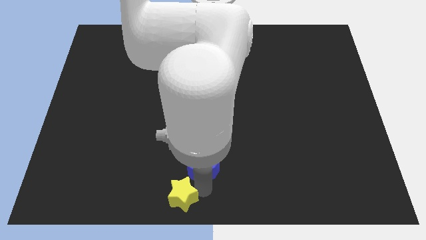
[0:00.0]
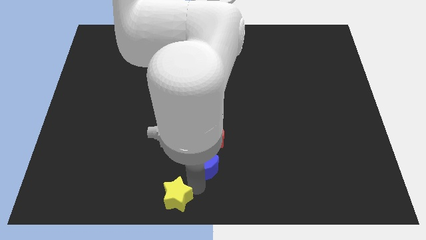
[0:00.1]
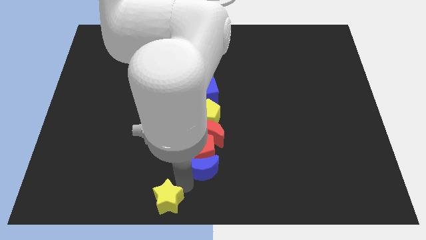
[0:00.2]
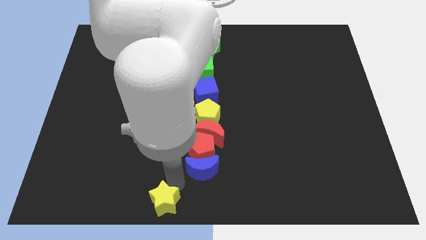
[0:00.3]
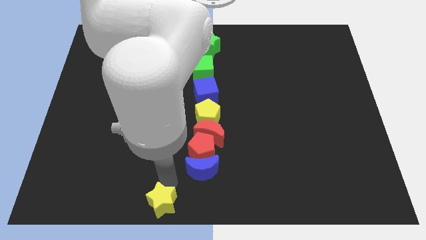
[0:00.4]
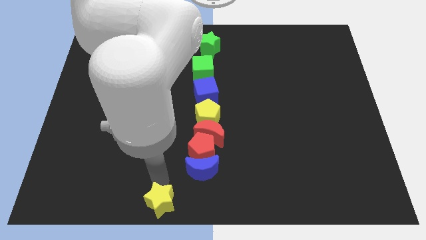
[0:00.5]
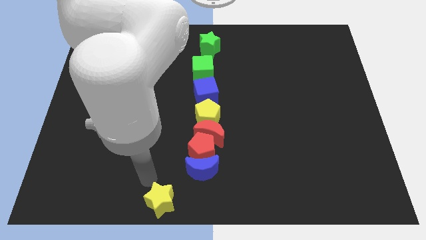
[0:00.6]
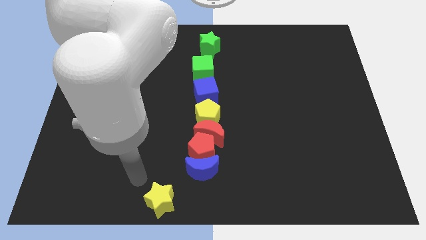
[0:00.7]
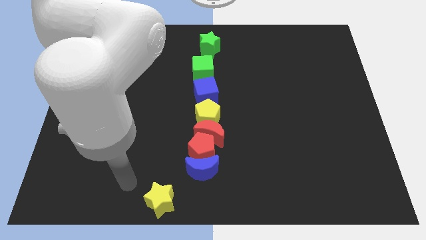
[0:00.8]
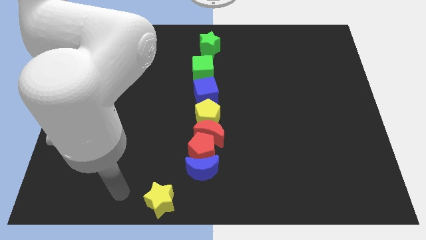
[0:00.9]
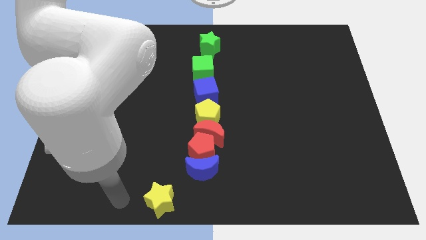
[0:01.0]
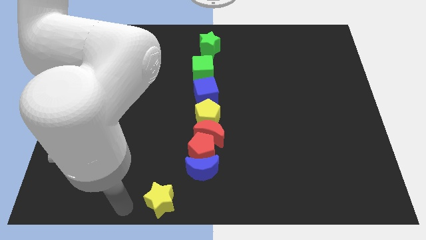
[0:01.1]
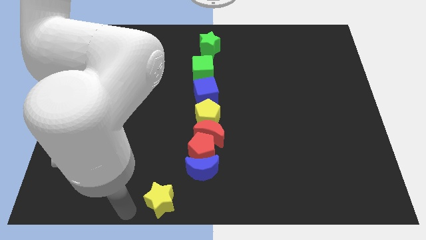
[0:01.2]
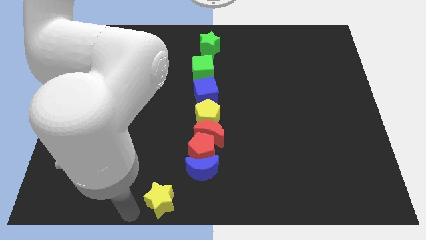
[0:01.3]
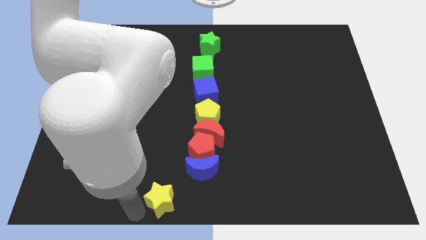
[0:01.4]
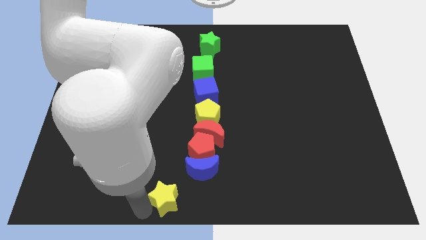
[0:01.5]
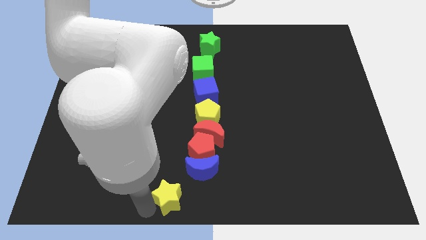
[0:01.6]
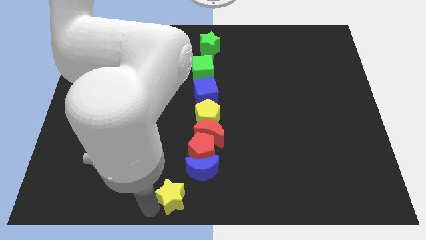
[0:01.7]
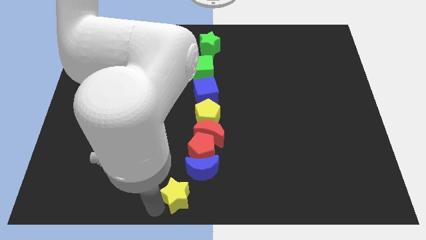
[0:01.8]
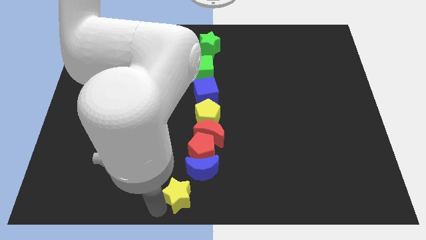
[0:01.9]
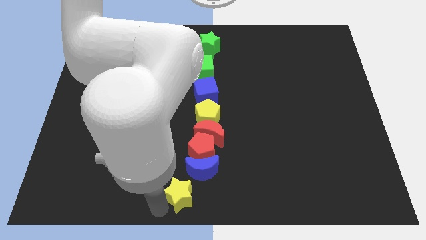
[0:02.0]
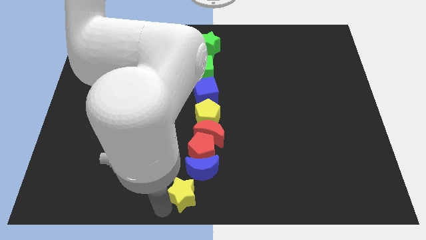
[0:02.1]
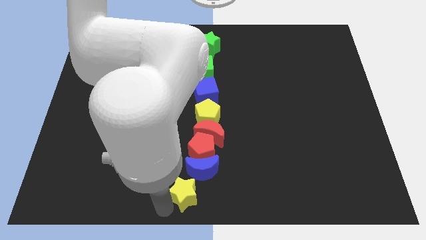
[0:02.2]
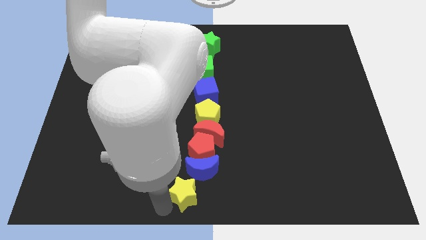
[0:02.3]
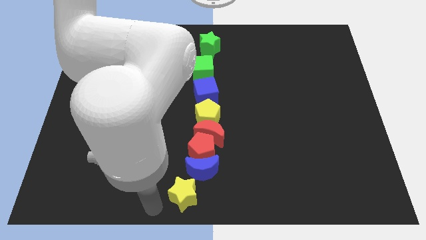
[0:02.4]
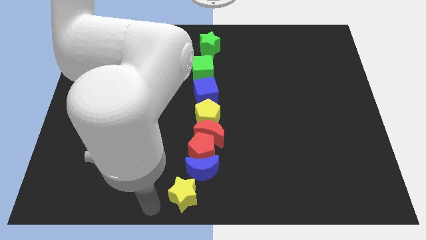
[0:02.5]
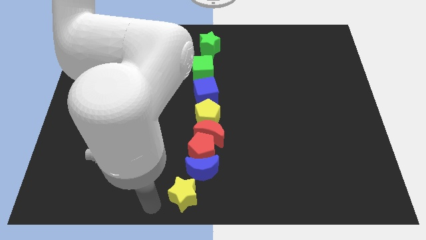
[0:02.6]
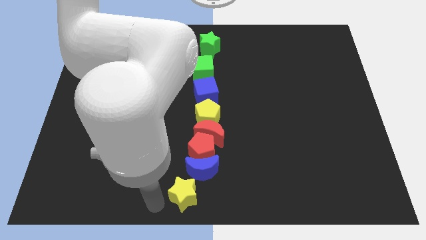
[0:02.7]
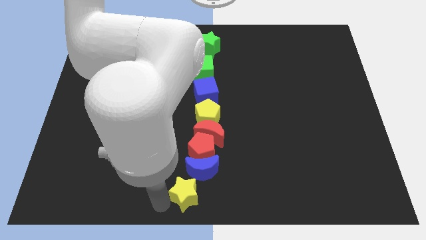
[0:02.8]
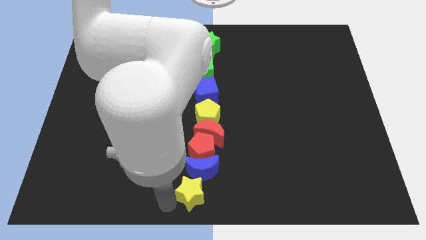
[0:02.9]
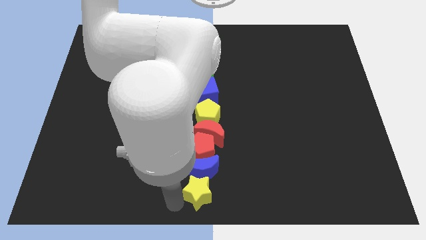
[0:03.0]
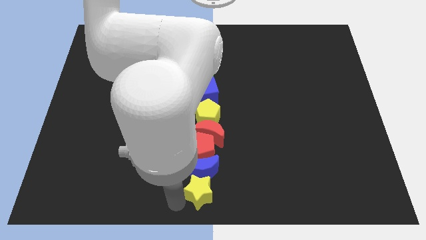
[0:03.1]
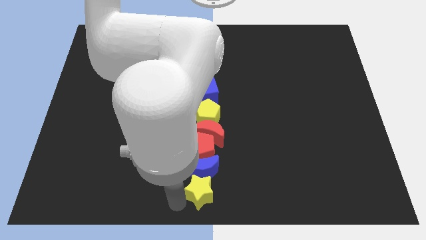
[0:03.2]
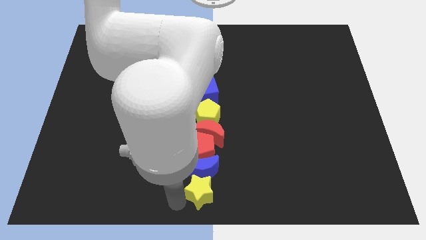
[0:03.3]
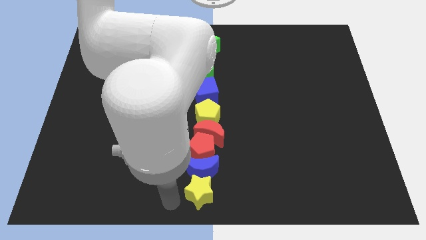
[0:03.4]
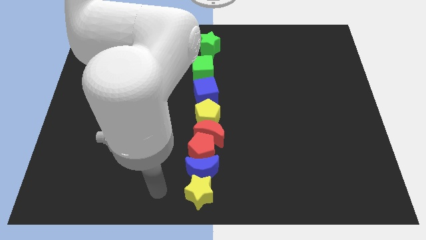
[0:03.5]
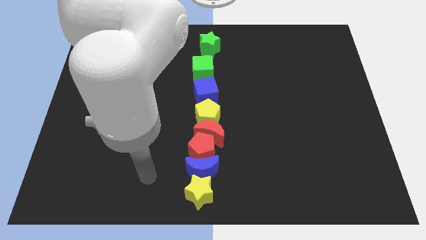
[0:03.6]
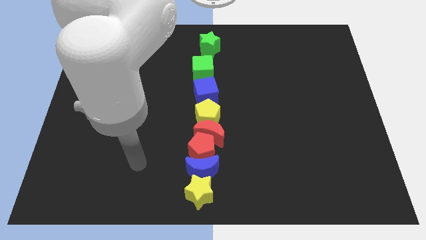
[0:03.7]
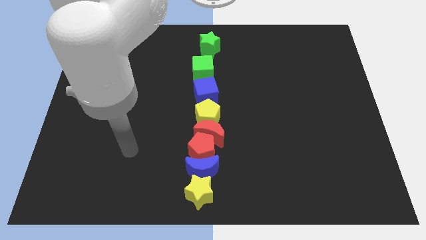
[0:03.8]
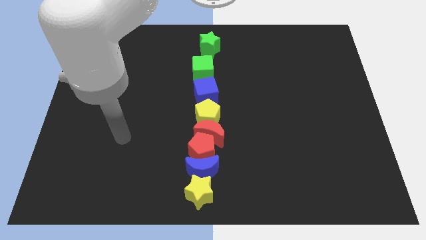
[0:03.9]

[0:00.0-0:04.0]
move the yellow star below the blue moon

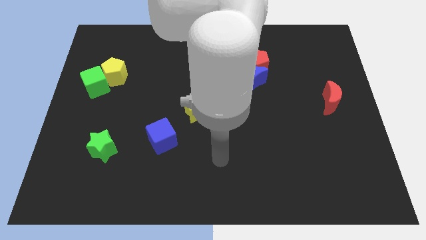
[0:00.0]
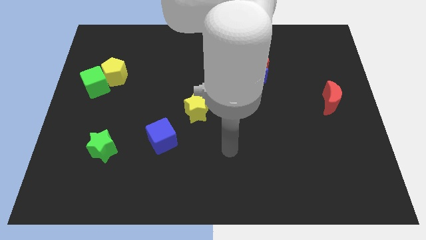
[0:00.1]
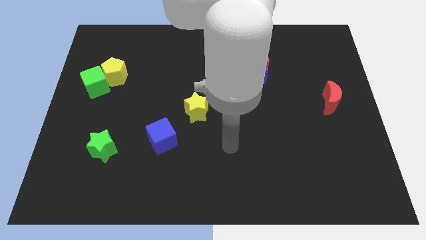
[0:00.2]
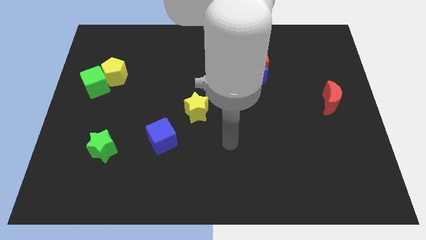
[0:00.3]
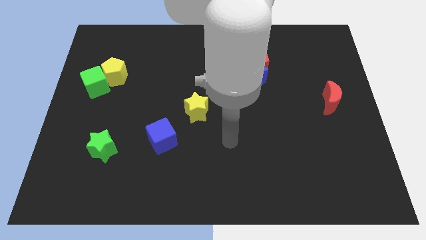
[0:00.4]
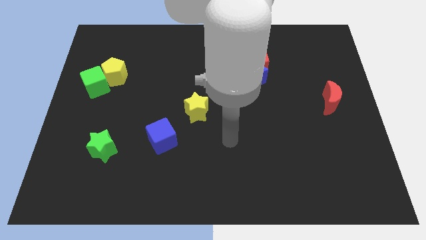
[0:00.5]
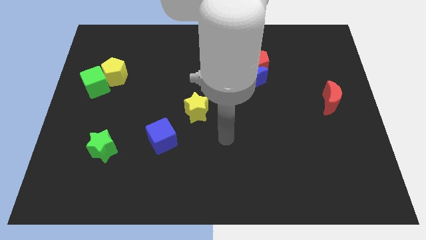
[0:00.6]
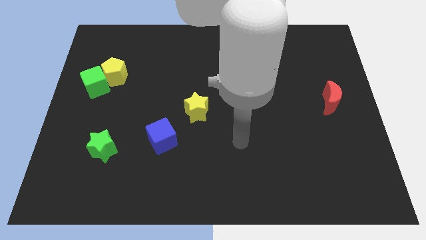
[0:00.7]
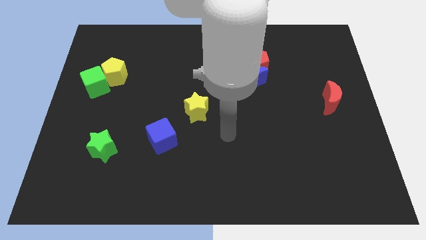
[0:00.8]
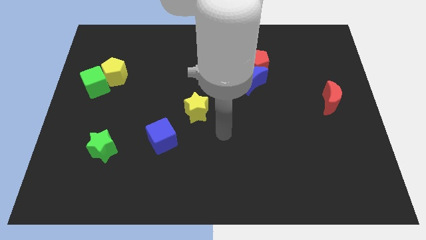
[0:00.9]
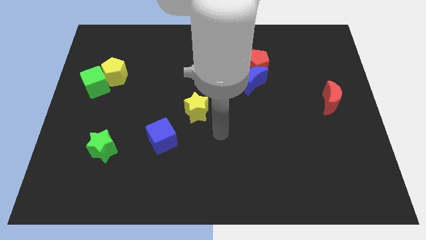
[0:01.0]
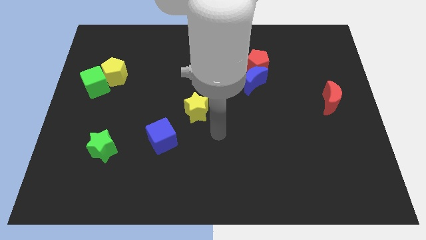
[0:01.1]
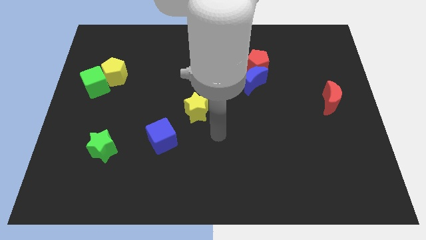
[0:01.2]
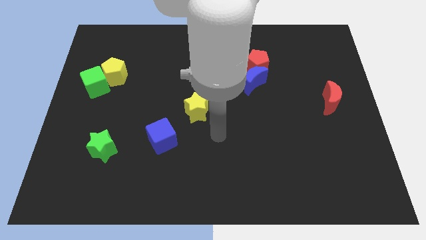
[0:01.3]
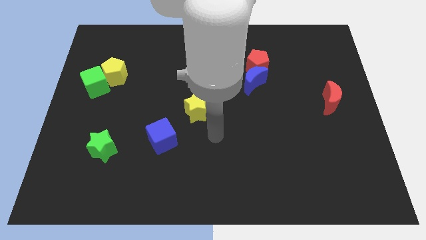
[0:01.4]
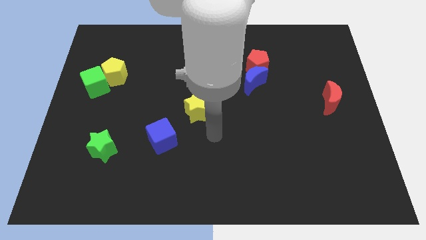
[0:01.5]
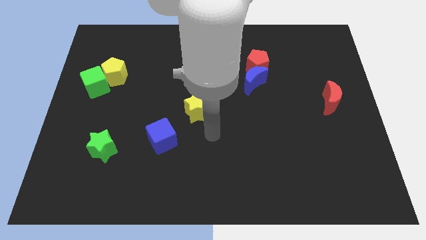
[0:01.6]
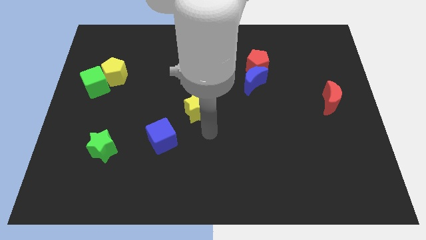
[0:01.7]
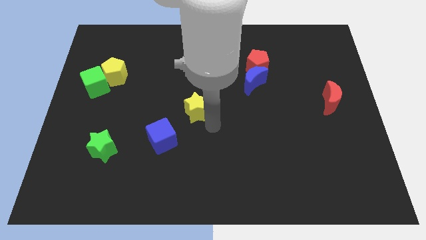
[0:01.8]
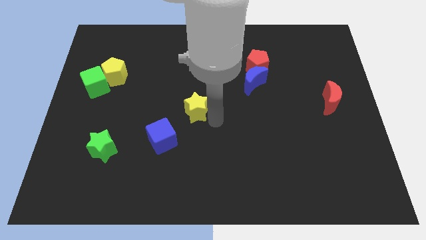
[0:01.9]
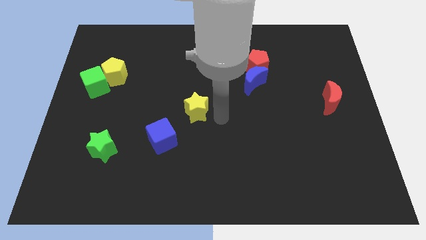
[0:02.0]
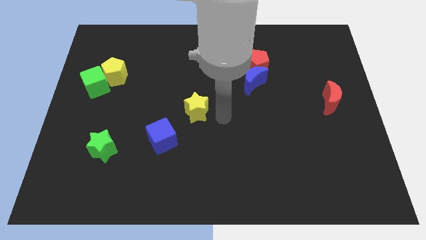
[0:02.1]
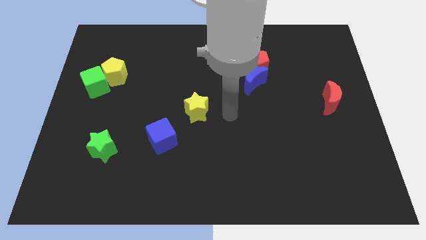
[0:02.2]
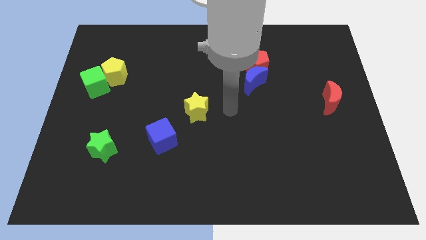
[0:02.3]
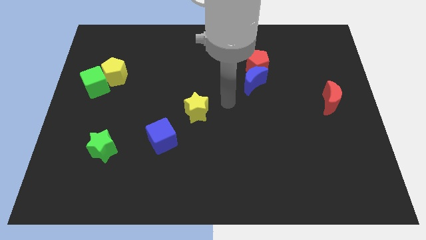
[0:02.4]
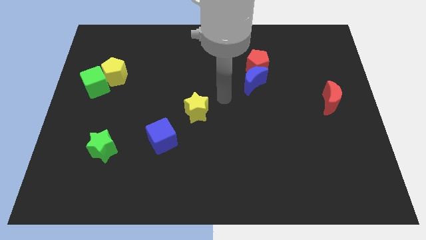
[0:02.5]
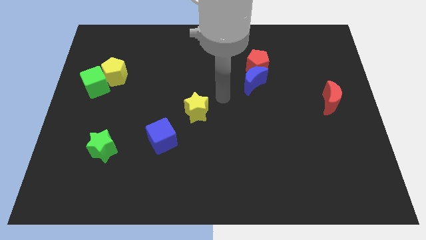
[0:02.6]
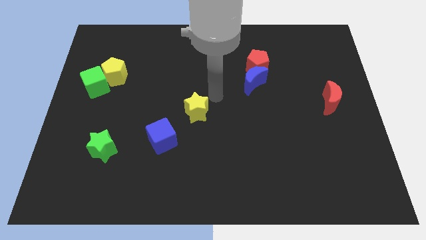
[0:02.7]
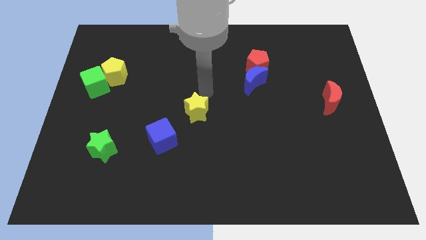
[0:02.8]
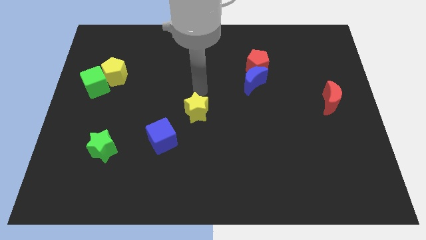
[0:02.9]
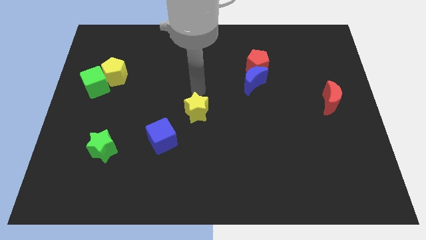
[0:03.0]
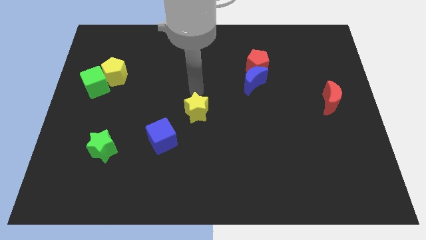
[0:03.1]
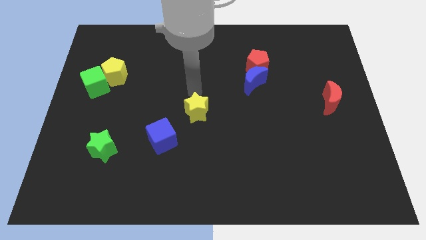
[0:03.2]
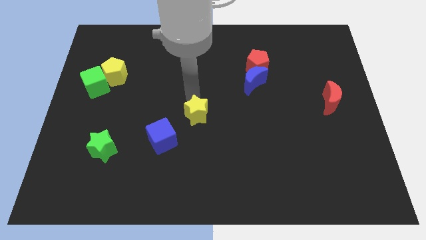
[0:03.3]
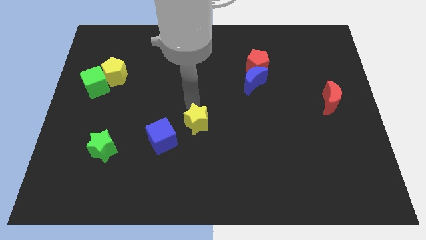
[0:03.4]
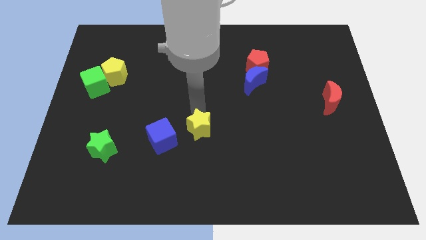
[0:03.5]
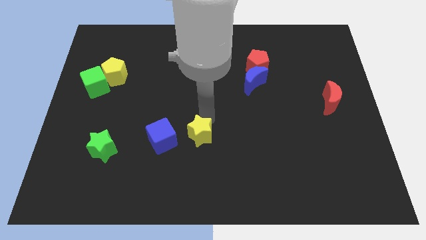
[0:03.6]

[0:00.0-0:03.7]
move yellow star slightly down

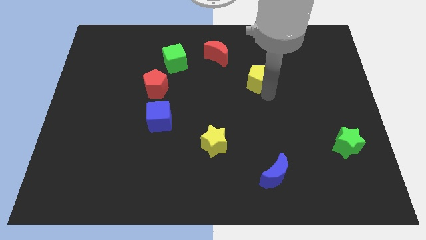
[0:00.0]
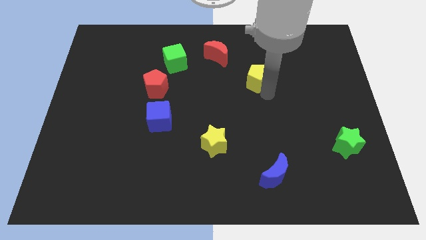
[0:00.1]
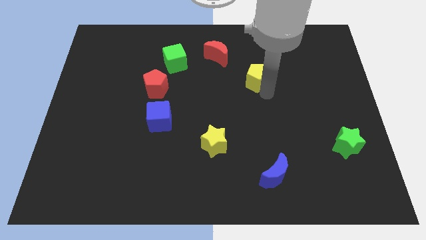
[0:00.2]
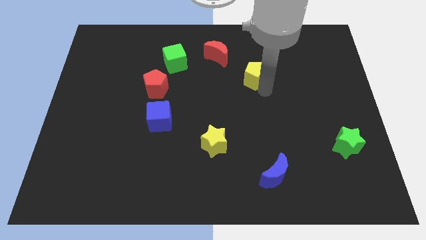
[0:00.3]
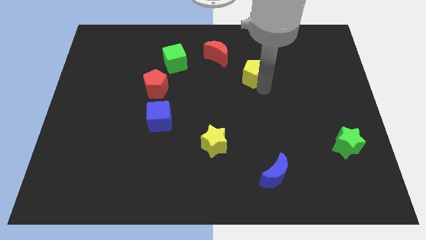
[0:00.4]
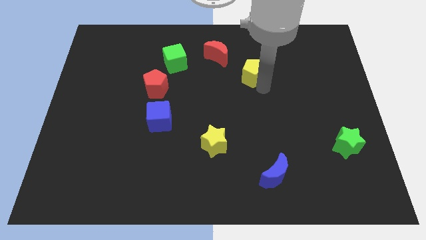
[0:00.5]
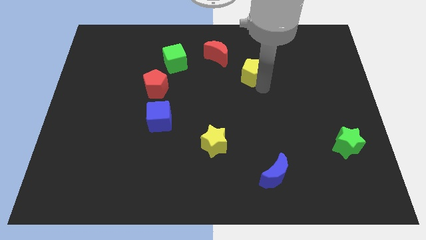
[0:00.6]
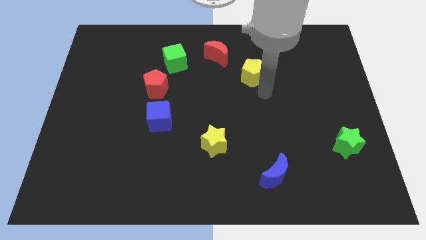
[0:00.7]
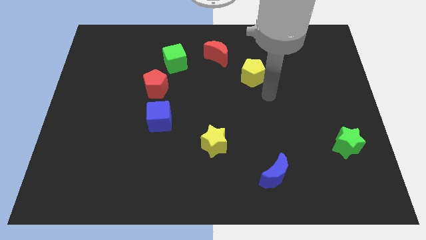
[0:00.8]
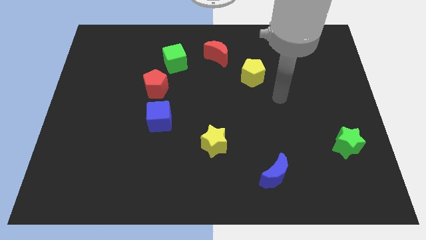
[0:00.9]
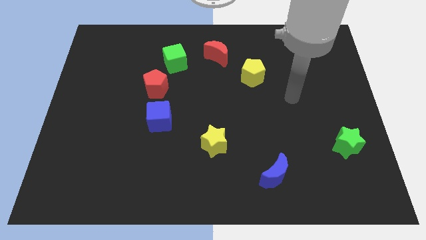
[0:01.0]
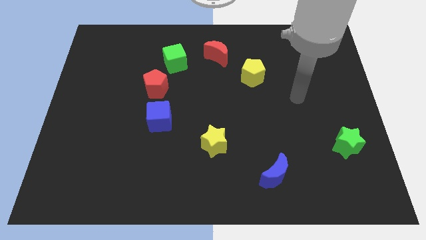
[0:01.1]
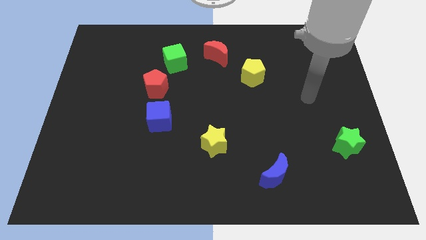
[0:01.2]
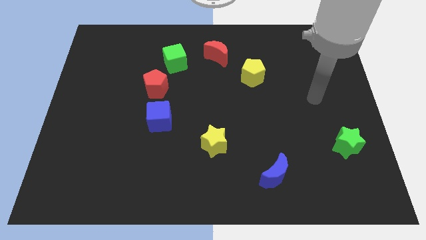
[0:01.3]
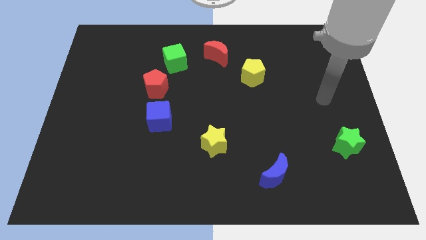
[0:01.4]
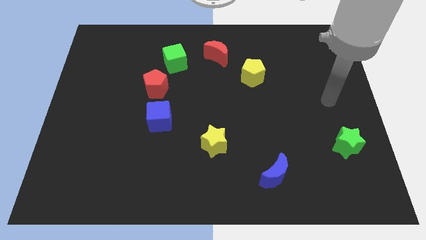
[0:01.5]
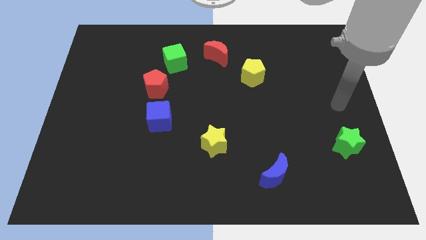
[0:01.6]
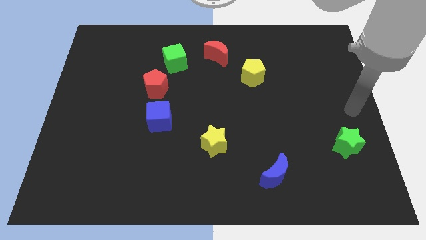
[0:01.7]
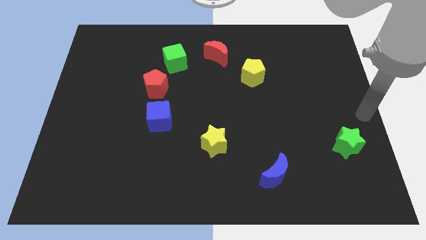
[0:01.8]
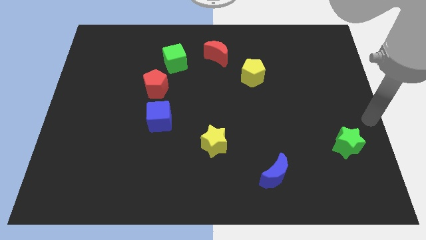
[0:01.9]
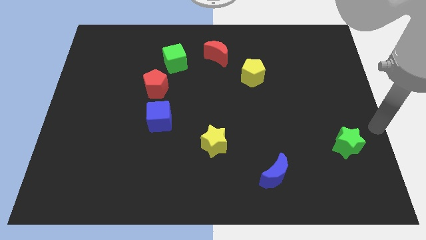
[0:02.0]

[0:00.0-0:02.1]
place the arm towards green star
